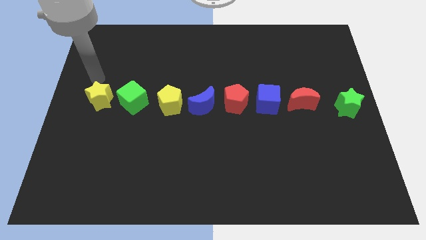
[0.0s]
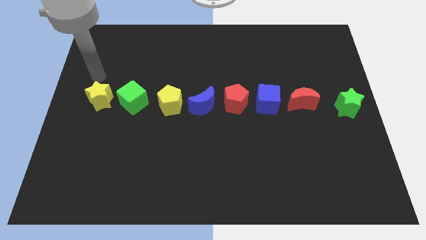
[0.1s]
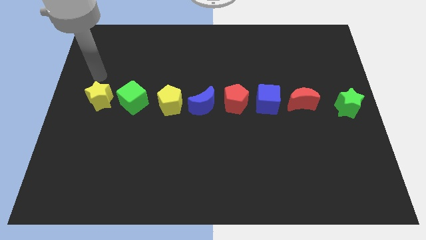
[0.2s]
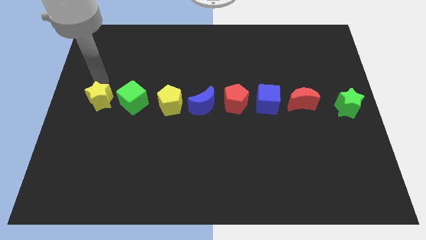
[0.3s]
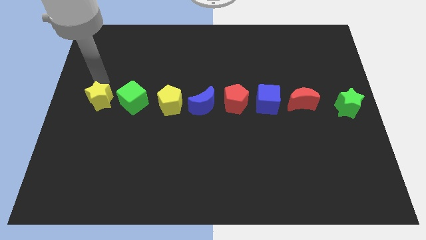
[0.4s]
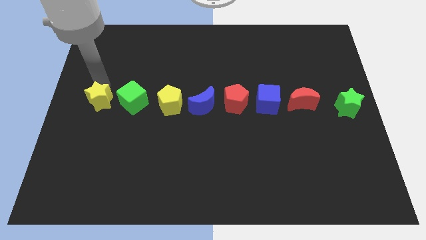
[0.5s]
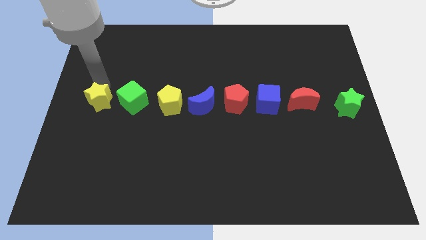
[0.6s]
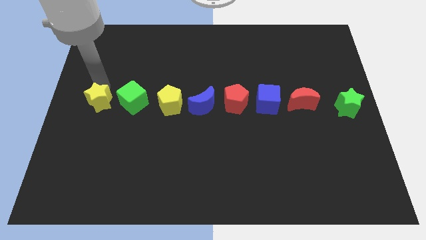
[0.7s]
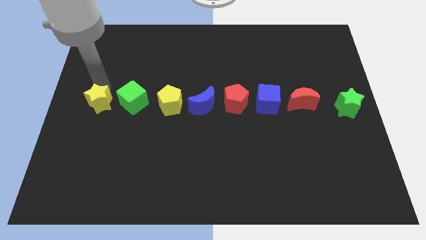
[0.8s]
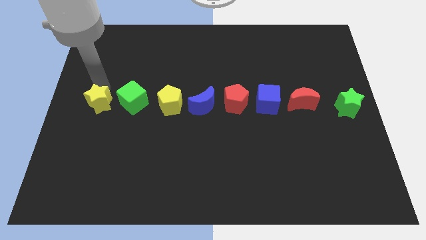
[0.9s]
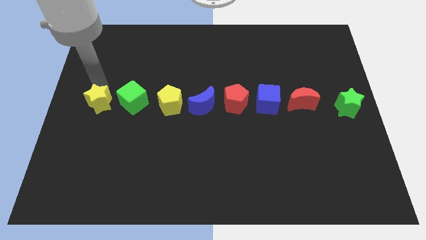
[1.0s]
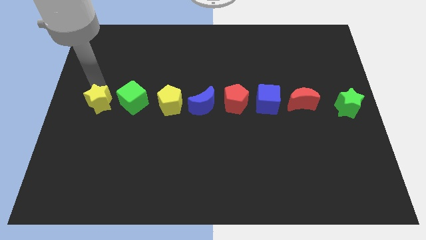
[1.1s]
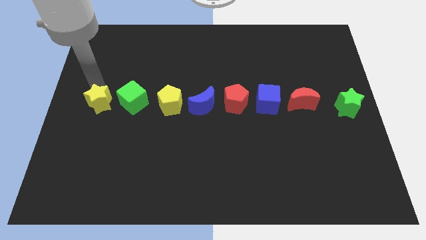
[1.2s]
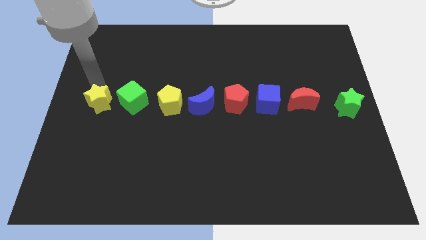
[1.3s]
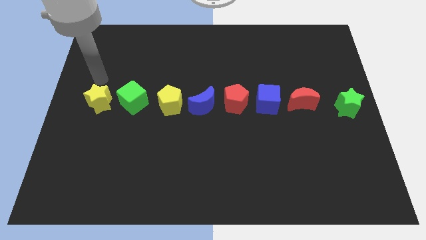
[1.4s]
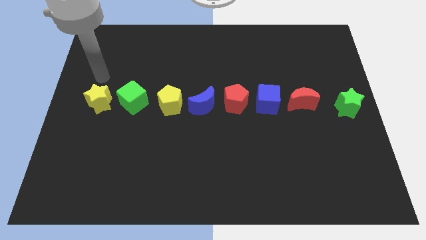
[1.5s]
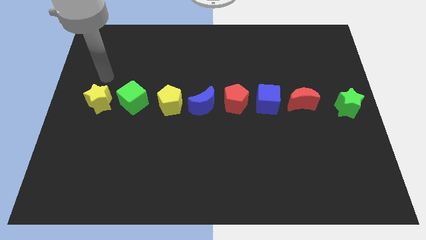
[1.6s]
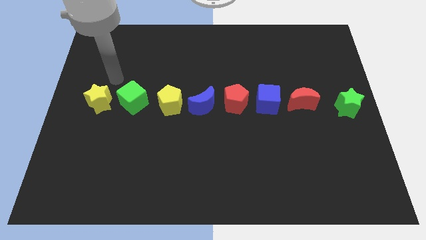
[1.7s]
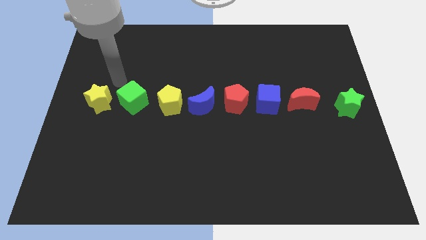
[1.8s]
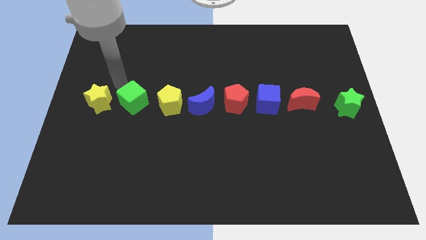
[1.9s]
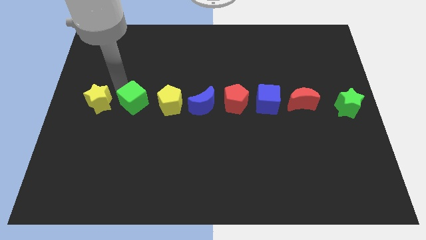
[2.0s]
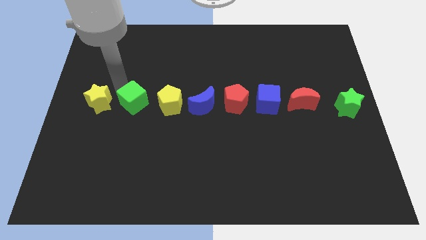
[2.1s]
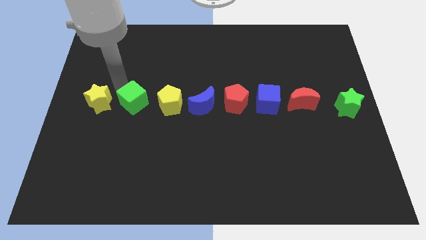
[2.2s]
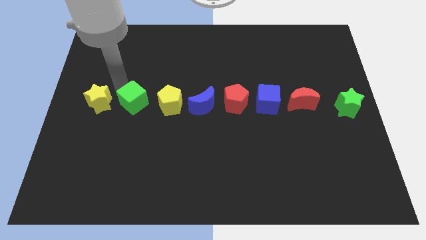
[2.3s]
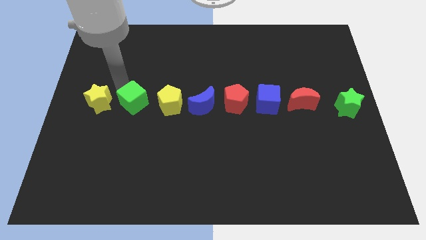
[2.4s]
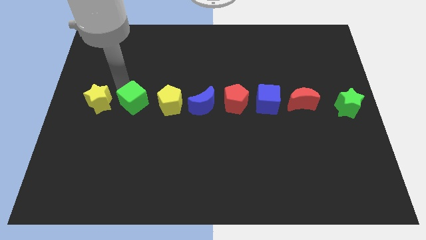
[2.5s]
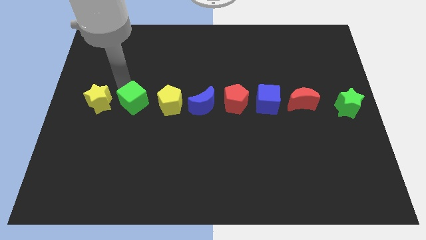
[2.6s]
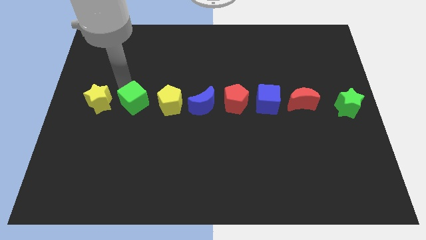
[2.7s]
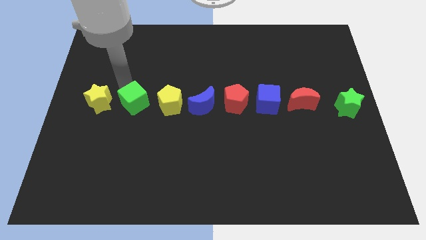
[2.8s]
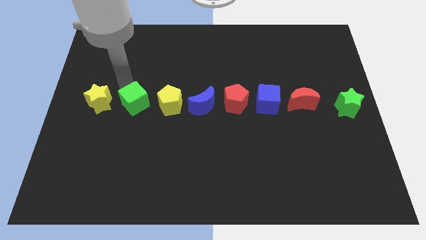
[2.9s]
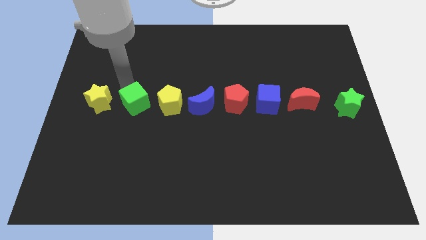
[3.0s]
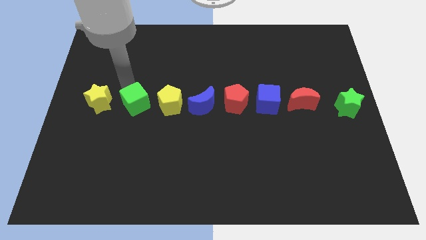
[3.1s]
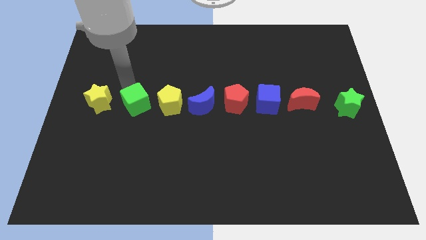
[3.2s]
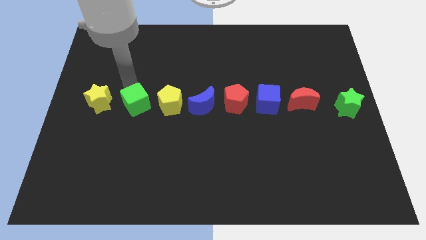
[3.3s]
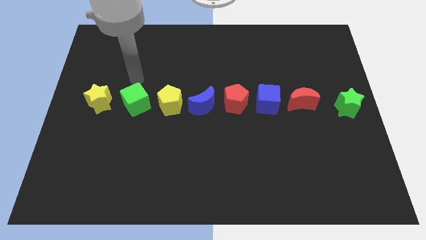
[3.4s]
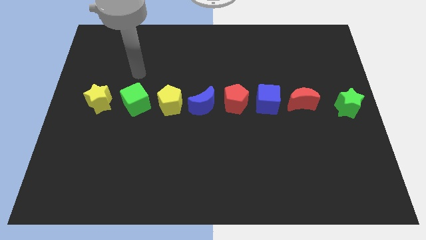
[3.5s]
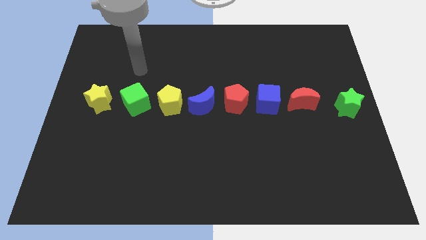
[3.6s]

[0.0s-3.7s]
adjust the green cube in between the yellow star and yellow pentagon

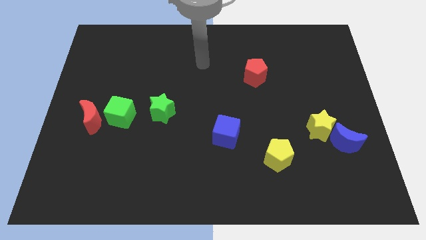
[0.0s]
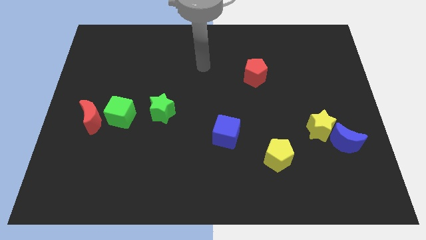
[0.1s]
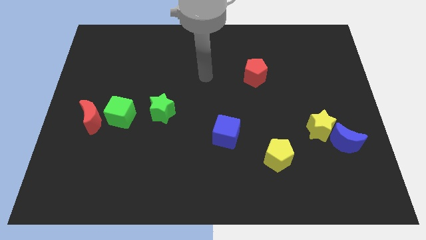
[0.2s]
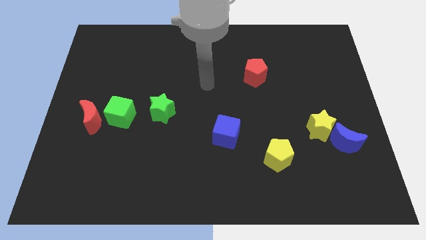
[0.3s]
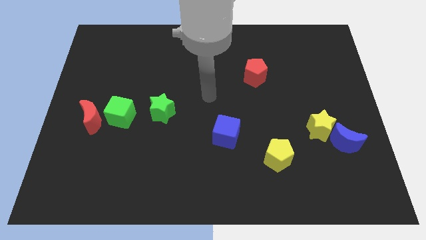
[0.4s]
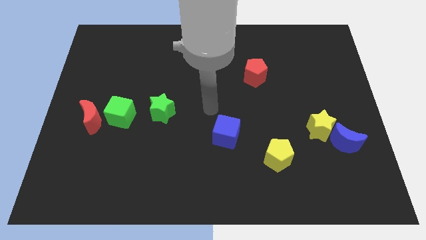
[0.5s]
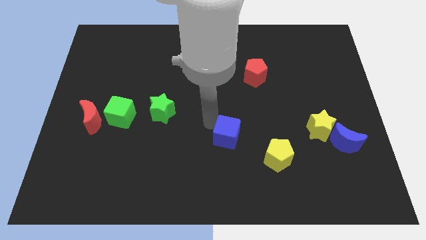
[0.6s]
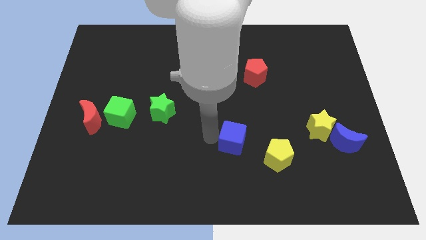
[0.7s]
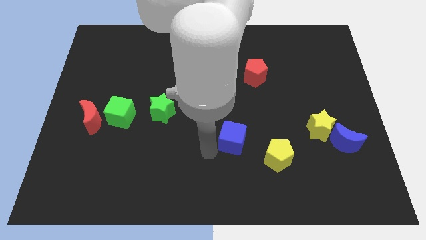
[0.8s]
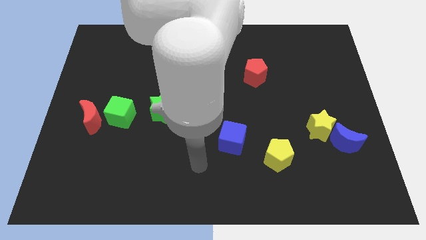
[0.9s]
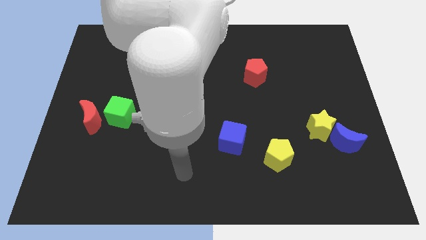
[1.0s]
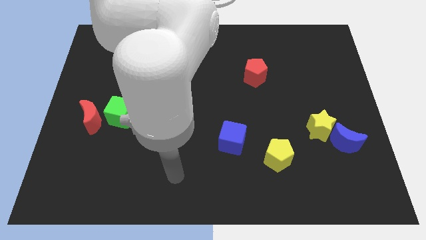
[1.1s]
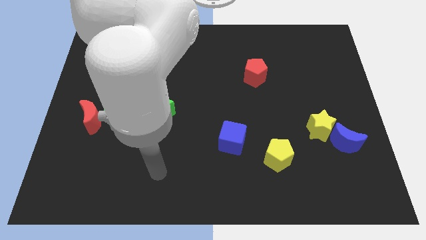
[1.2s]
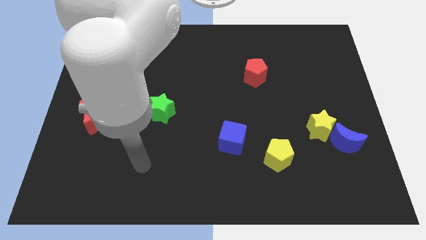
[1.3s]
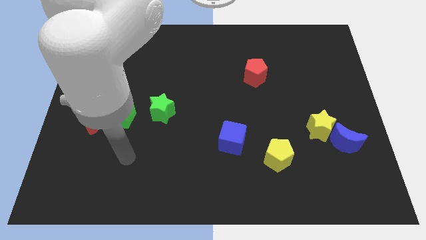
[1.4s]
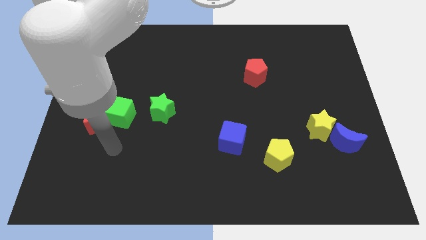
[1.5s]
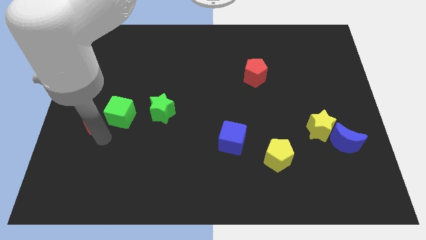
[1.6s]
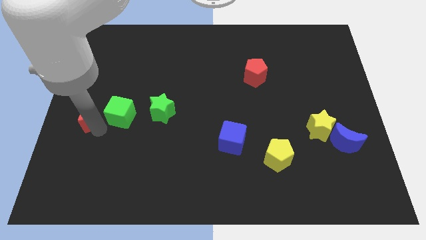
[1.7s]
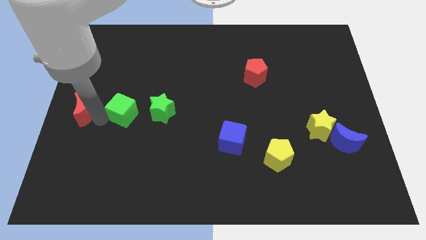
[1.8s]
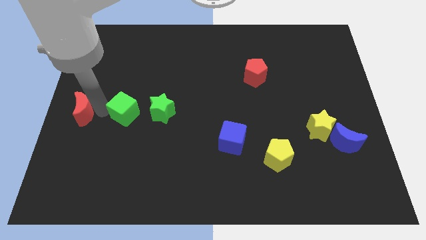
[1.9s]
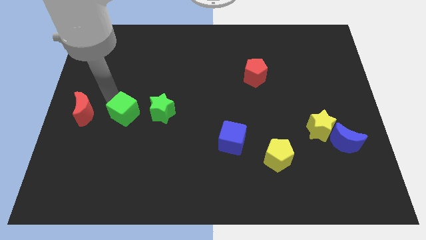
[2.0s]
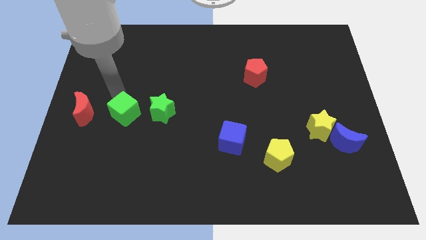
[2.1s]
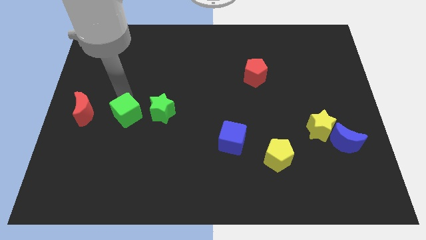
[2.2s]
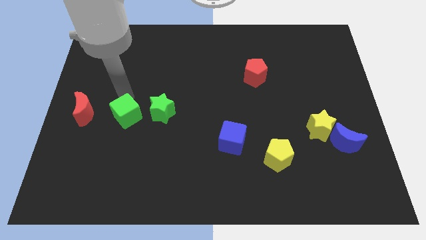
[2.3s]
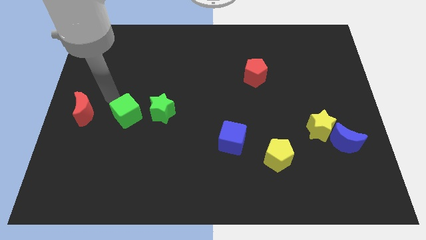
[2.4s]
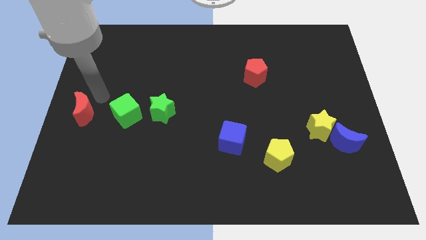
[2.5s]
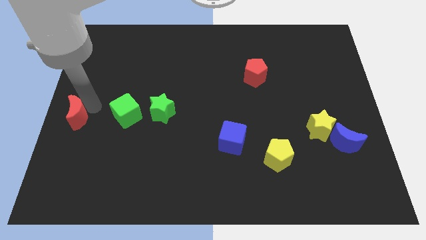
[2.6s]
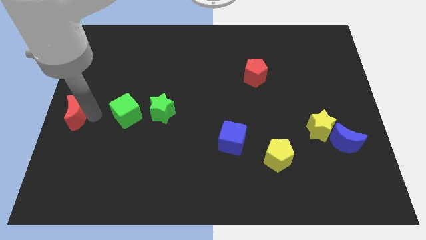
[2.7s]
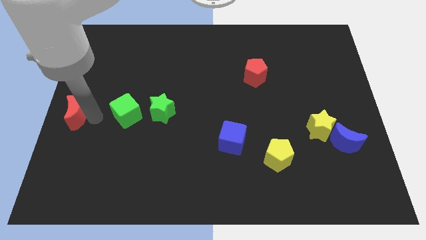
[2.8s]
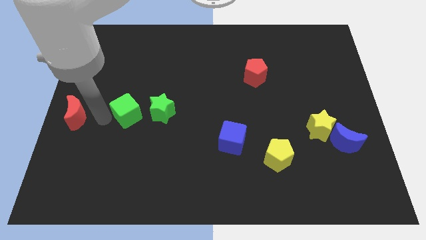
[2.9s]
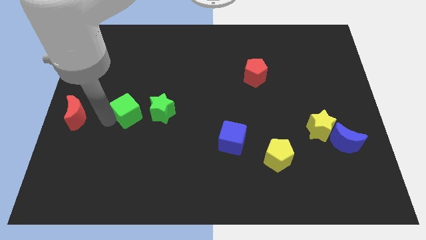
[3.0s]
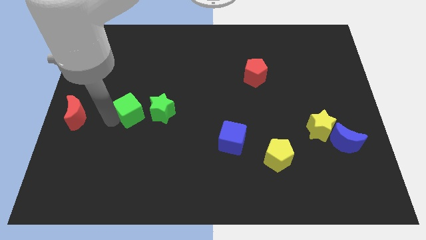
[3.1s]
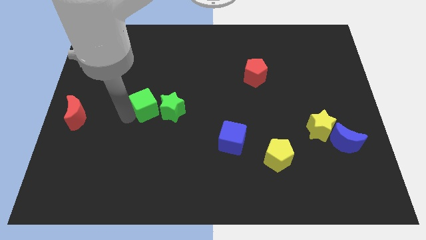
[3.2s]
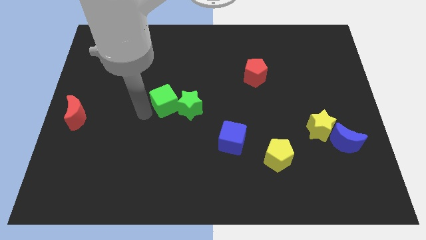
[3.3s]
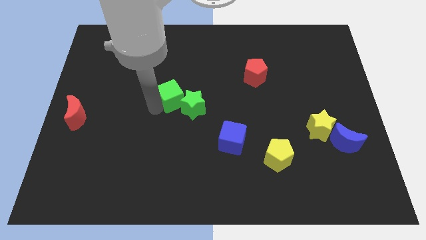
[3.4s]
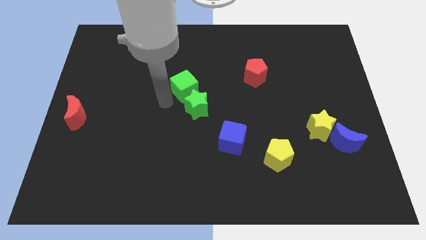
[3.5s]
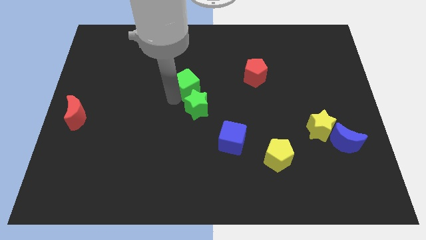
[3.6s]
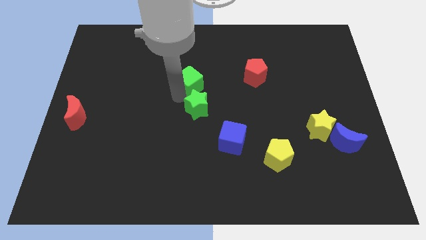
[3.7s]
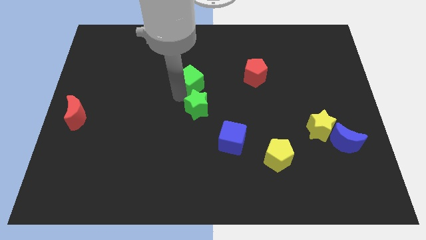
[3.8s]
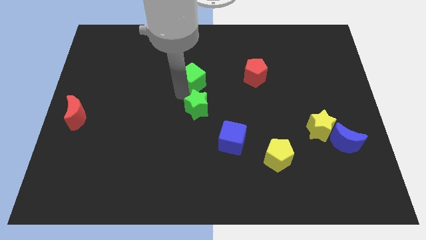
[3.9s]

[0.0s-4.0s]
move the green cube towards the center of the board

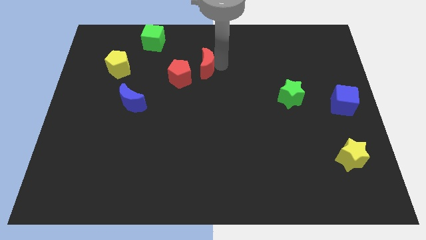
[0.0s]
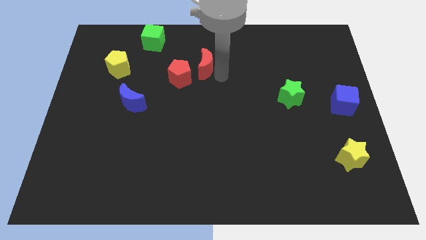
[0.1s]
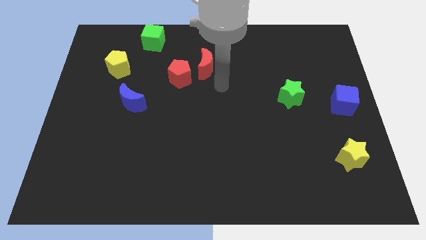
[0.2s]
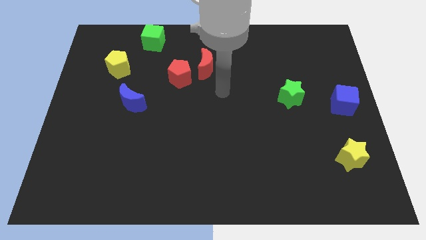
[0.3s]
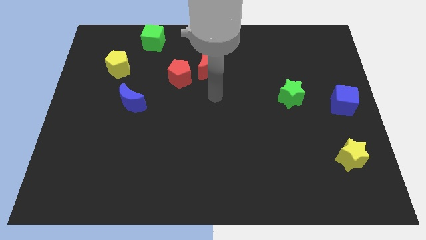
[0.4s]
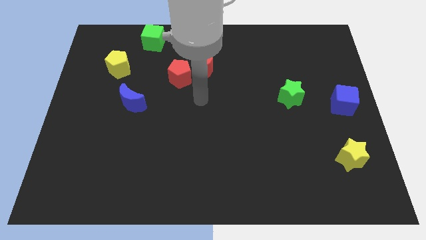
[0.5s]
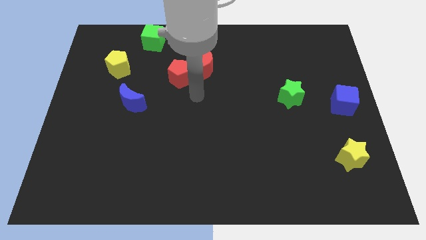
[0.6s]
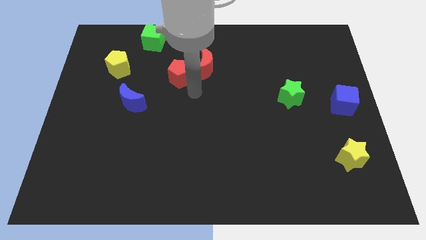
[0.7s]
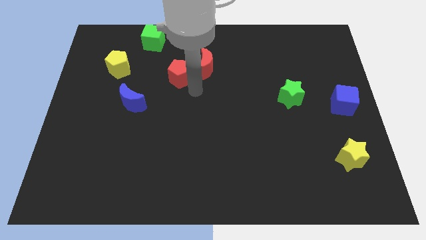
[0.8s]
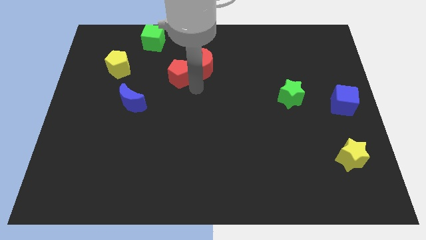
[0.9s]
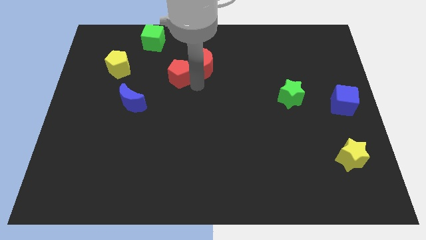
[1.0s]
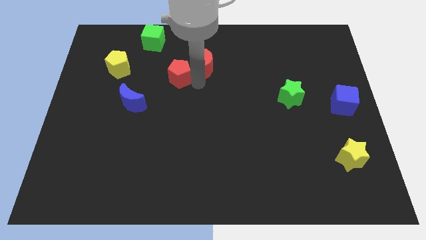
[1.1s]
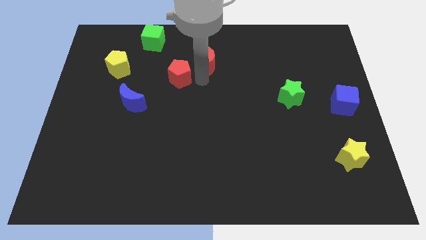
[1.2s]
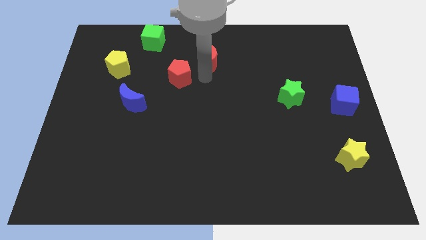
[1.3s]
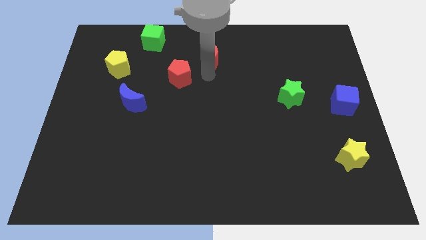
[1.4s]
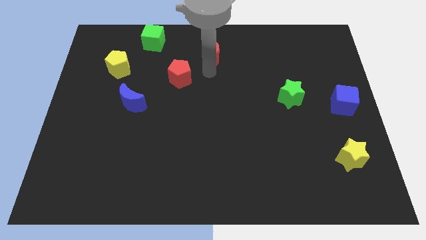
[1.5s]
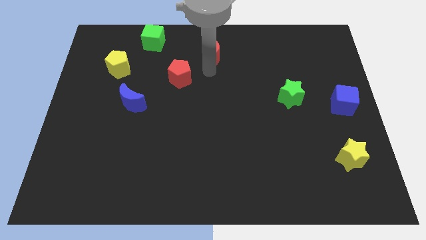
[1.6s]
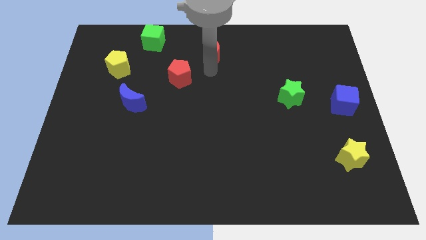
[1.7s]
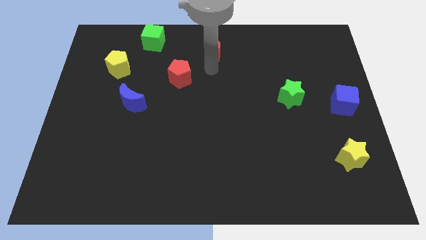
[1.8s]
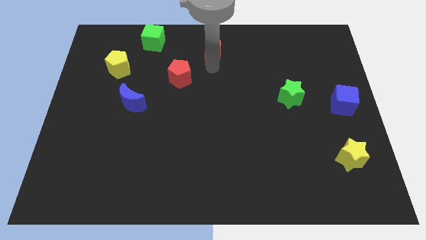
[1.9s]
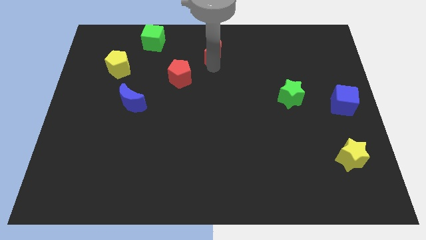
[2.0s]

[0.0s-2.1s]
move the red crescent towards the top center of the board
